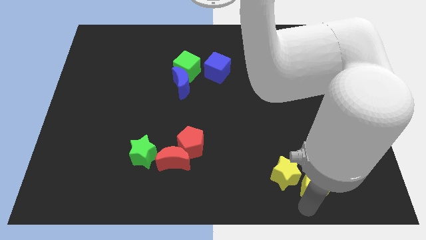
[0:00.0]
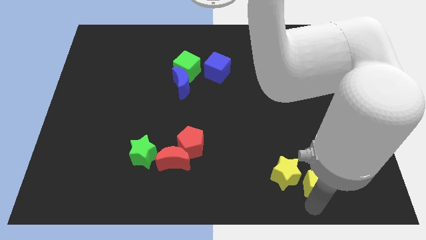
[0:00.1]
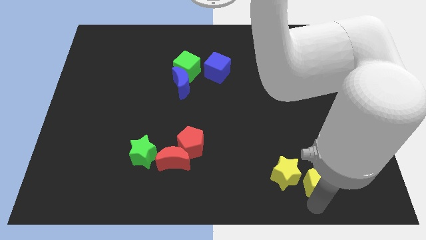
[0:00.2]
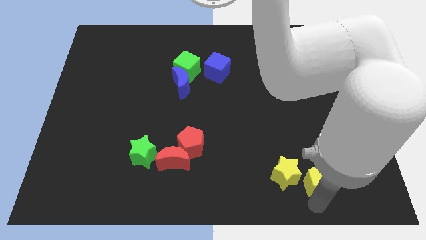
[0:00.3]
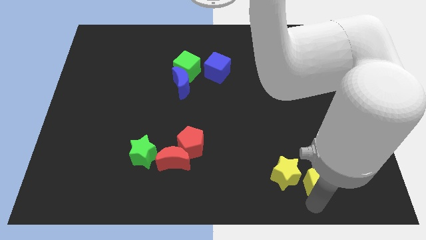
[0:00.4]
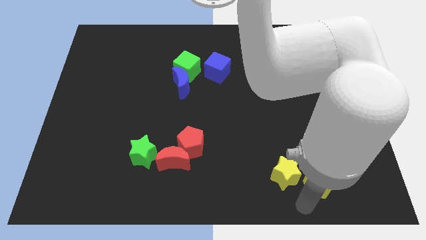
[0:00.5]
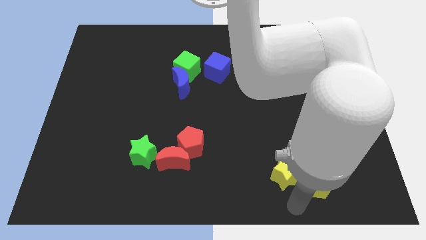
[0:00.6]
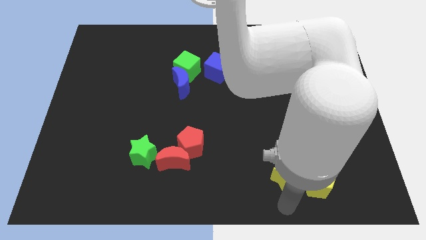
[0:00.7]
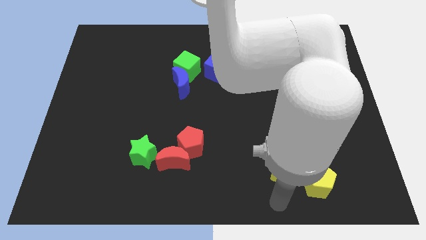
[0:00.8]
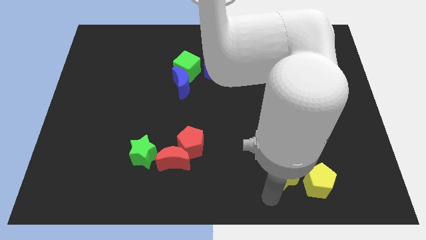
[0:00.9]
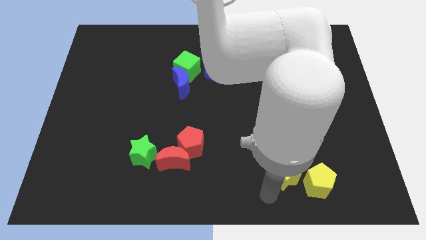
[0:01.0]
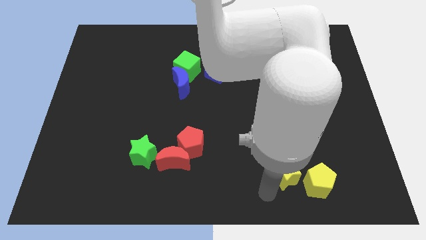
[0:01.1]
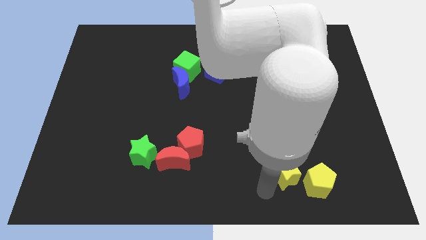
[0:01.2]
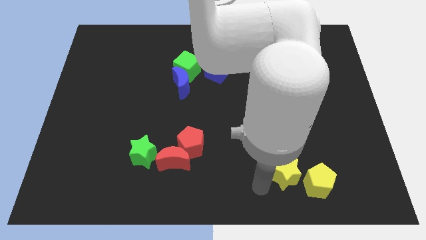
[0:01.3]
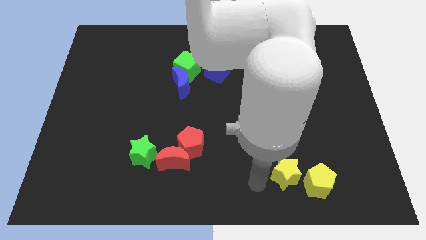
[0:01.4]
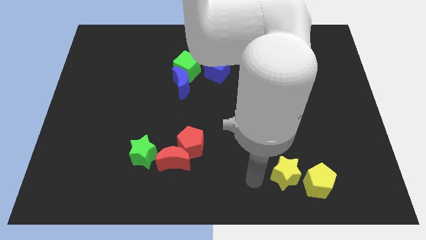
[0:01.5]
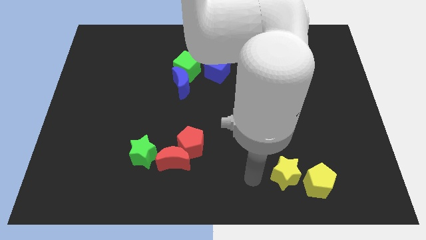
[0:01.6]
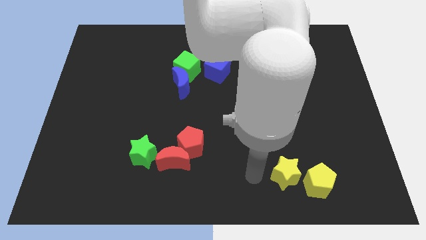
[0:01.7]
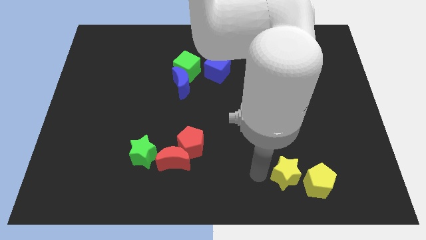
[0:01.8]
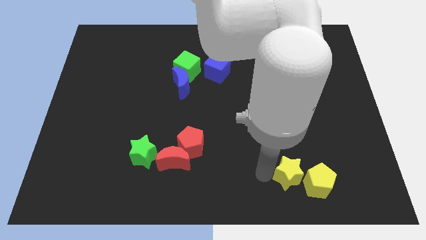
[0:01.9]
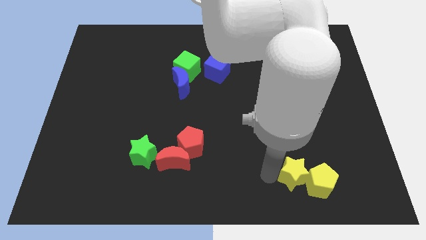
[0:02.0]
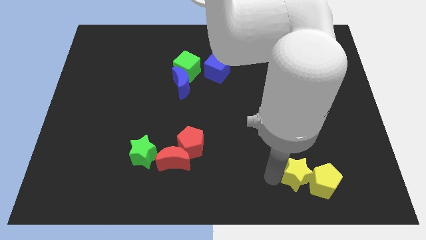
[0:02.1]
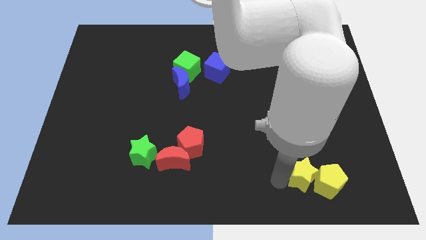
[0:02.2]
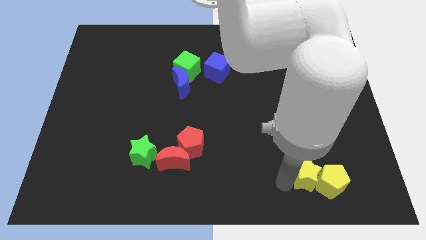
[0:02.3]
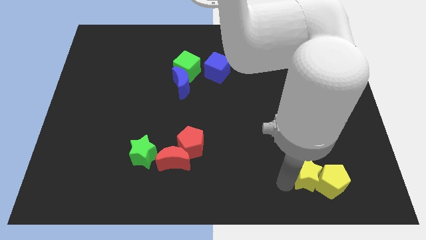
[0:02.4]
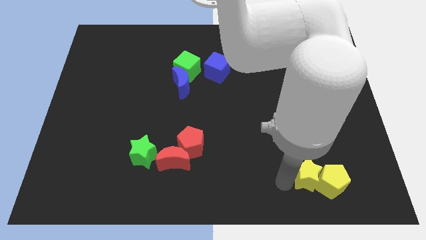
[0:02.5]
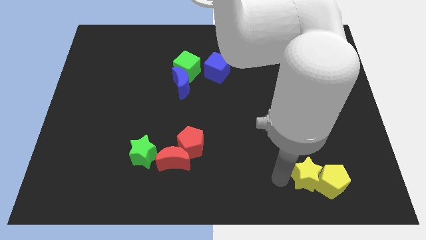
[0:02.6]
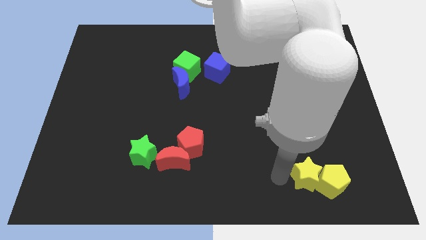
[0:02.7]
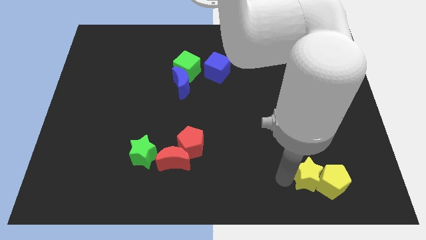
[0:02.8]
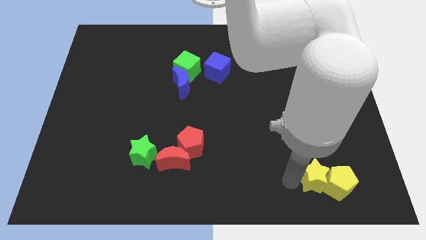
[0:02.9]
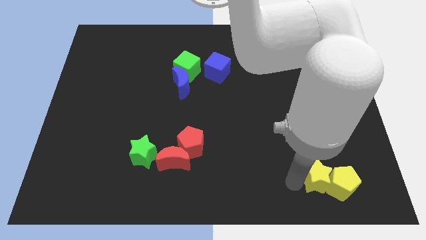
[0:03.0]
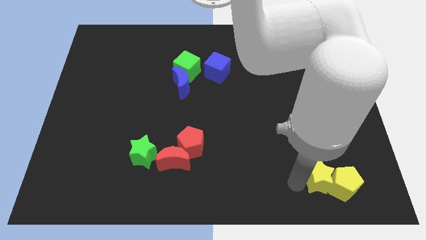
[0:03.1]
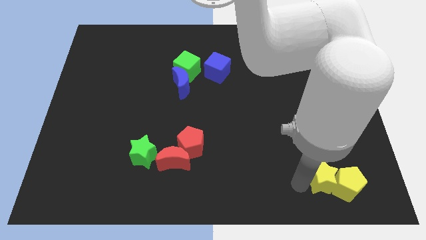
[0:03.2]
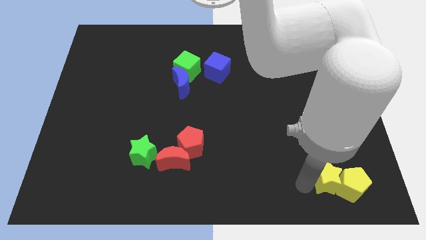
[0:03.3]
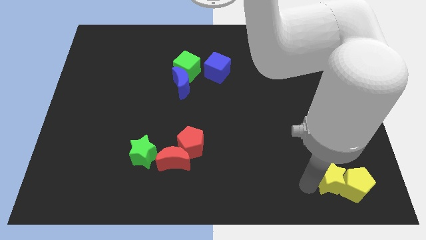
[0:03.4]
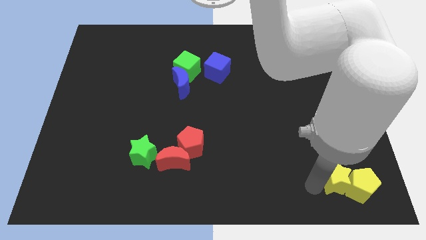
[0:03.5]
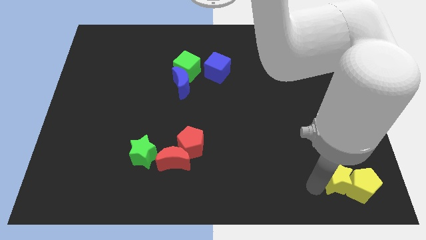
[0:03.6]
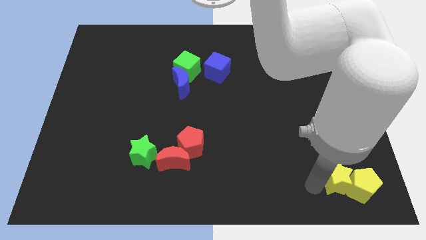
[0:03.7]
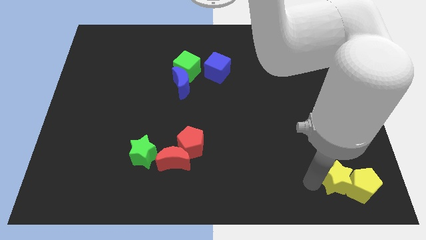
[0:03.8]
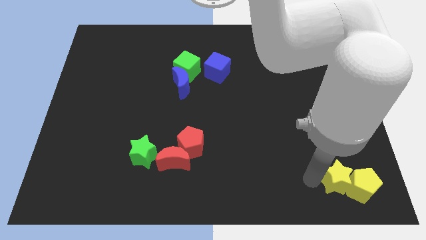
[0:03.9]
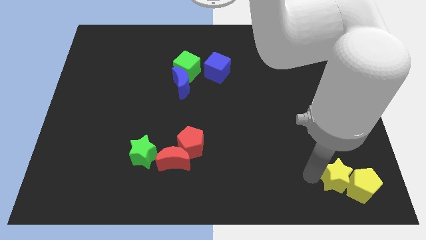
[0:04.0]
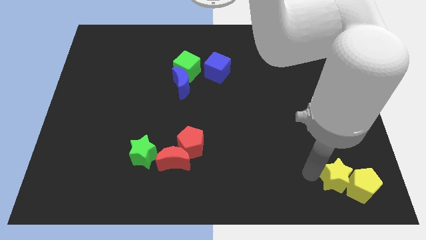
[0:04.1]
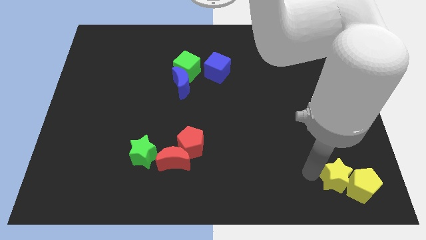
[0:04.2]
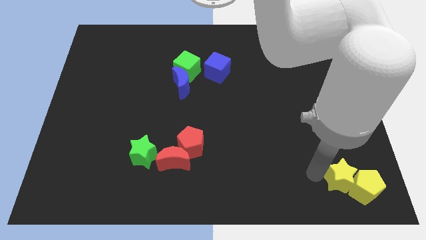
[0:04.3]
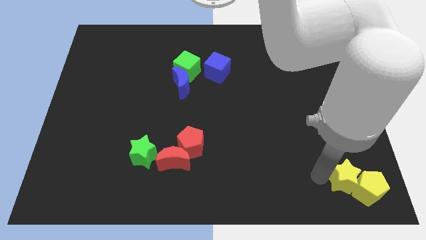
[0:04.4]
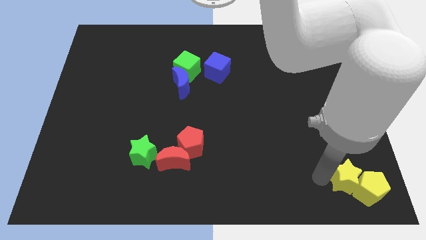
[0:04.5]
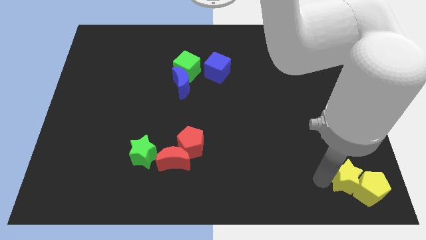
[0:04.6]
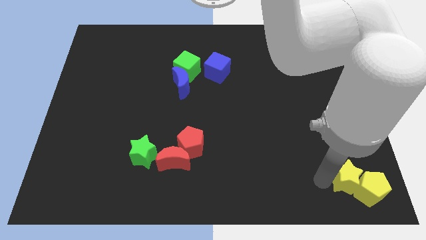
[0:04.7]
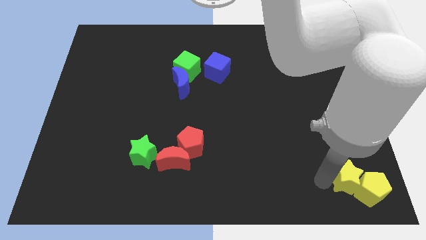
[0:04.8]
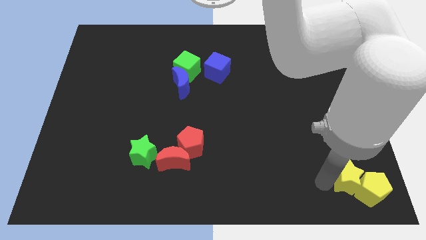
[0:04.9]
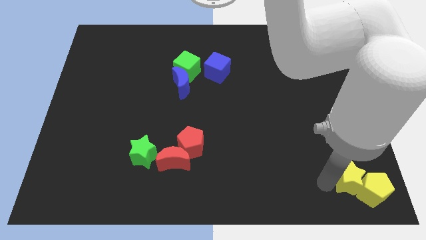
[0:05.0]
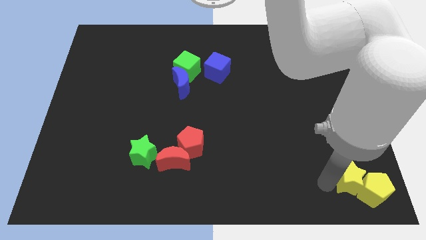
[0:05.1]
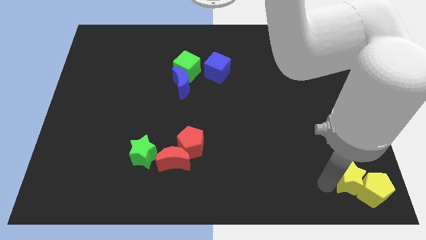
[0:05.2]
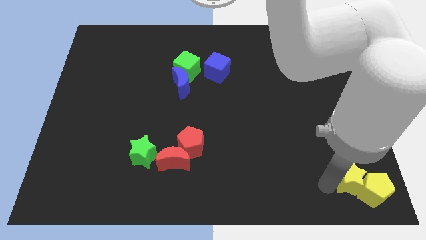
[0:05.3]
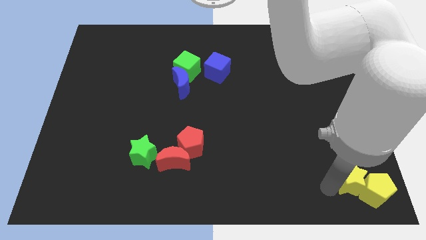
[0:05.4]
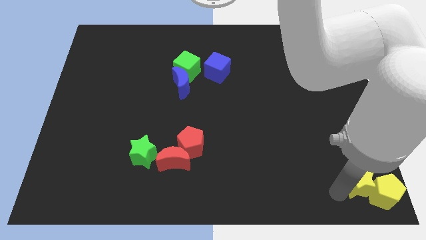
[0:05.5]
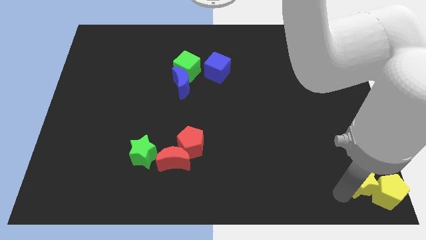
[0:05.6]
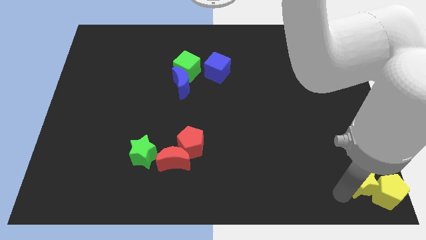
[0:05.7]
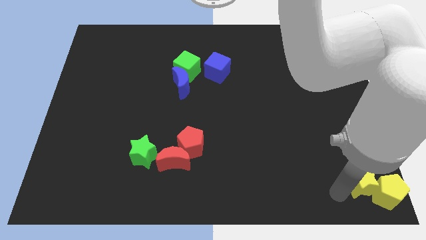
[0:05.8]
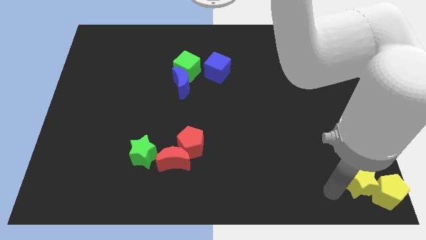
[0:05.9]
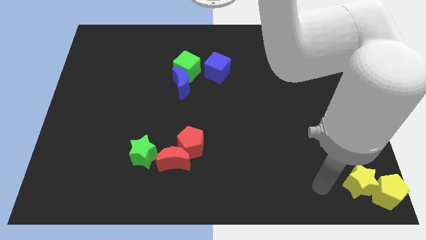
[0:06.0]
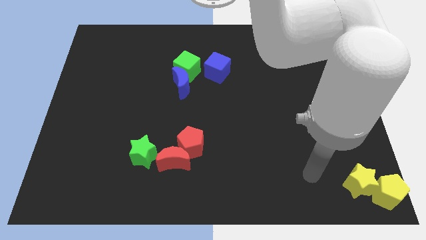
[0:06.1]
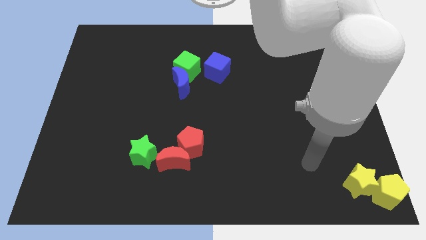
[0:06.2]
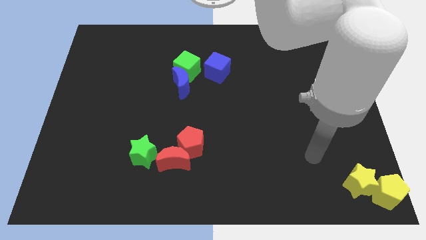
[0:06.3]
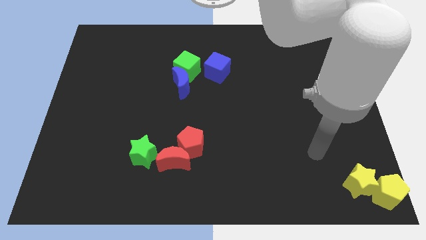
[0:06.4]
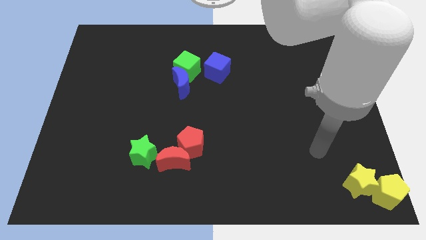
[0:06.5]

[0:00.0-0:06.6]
move the yellow blocks to the bottom right corner

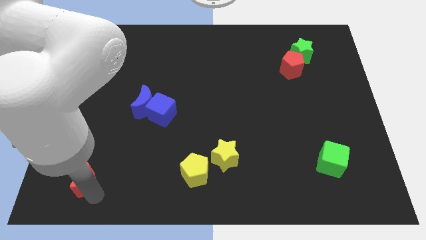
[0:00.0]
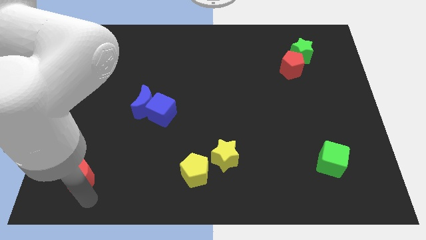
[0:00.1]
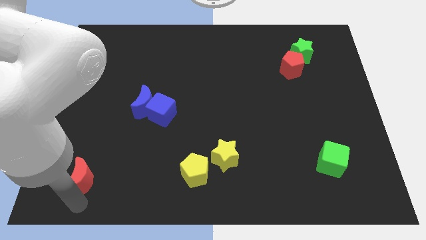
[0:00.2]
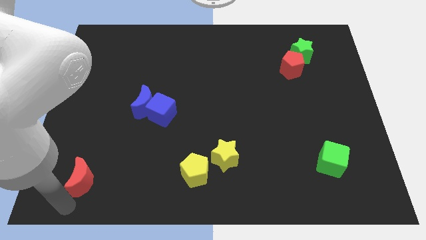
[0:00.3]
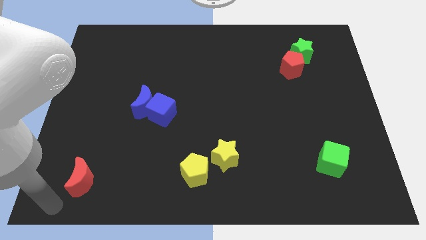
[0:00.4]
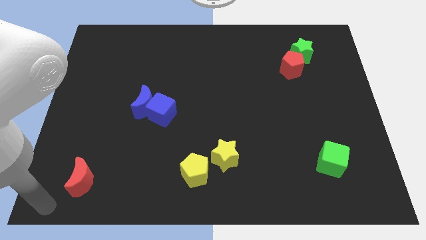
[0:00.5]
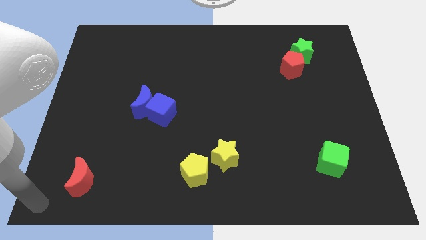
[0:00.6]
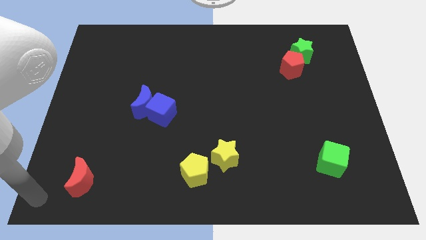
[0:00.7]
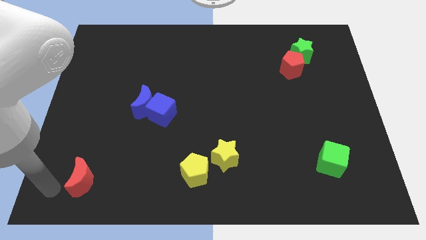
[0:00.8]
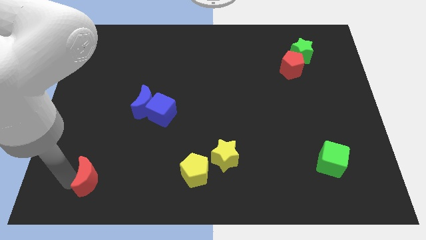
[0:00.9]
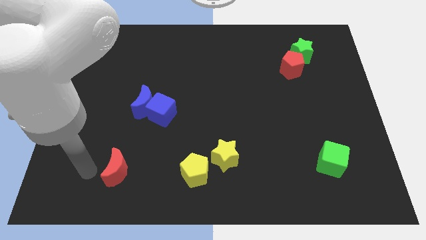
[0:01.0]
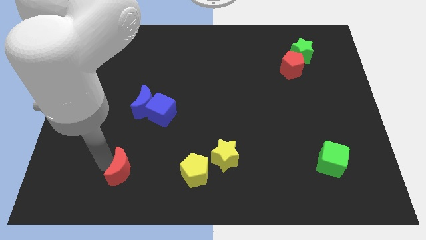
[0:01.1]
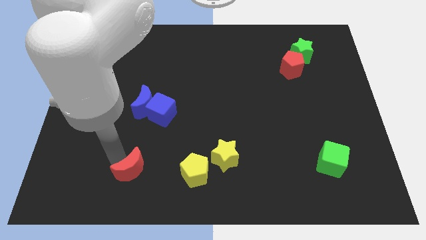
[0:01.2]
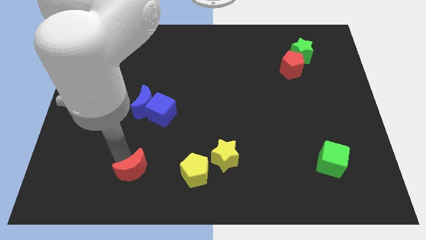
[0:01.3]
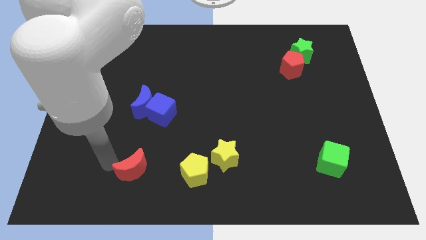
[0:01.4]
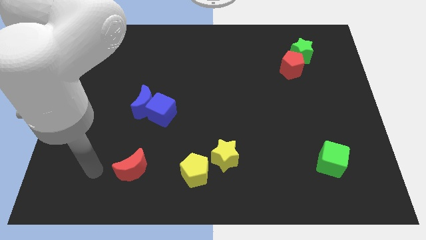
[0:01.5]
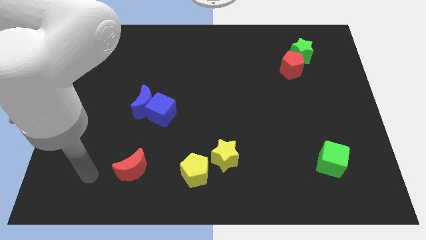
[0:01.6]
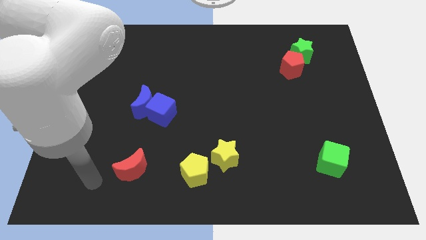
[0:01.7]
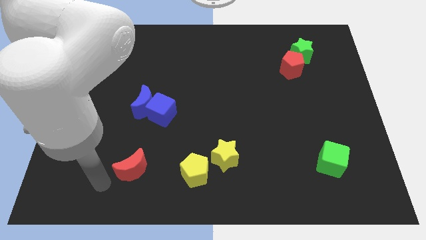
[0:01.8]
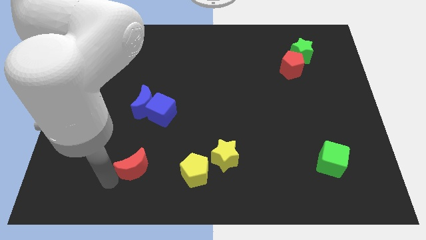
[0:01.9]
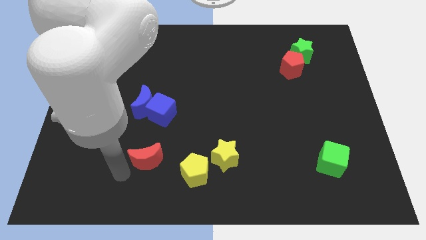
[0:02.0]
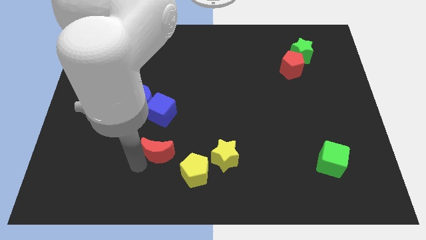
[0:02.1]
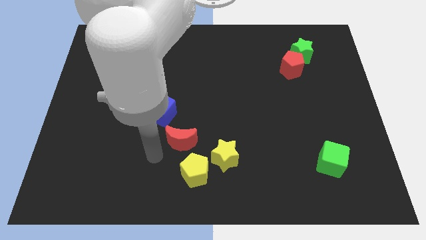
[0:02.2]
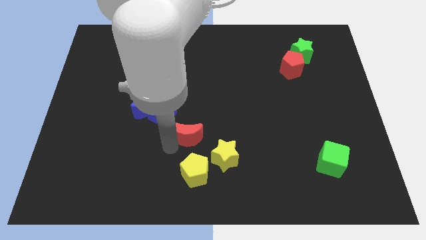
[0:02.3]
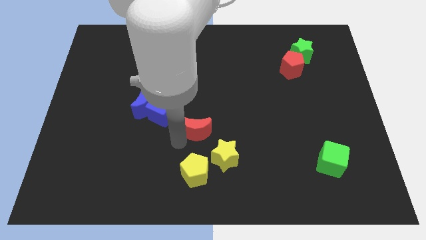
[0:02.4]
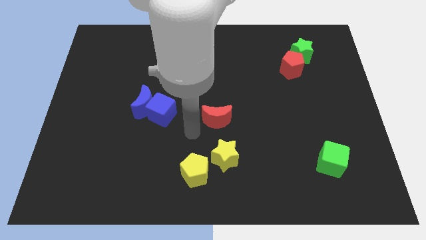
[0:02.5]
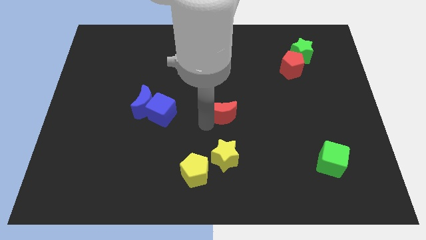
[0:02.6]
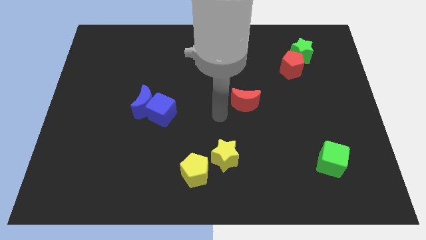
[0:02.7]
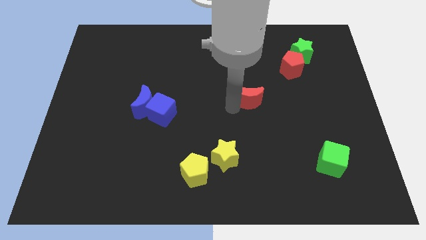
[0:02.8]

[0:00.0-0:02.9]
push the red crescent to the center
